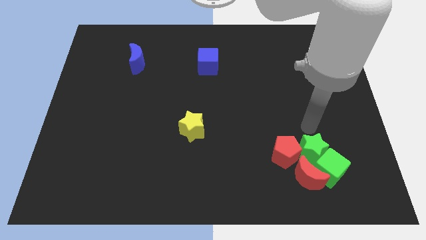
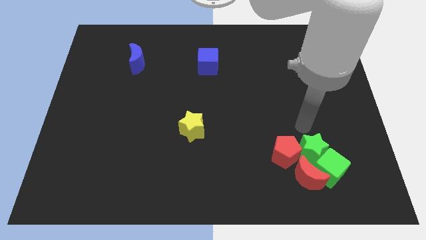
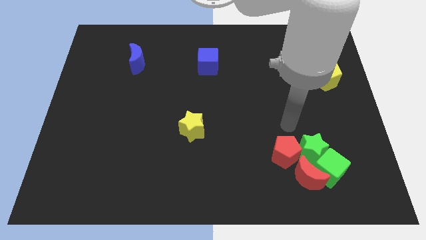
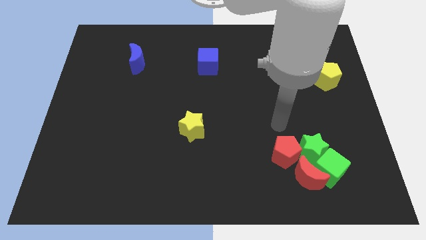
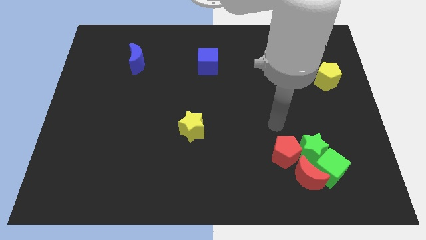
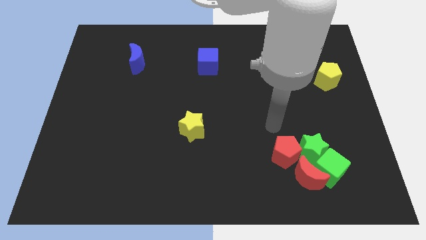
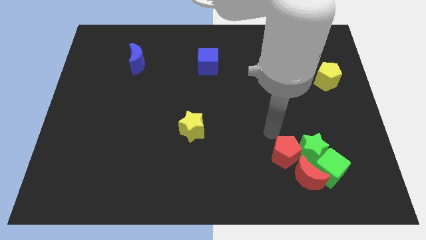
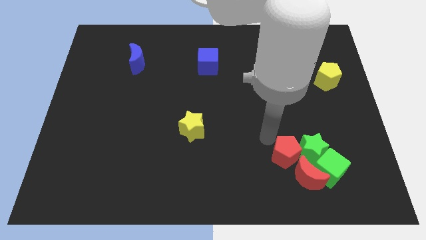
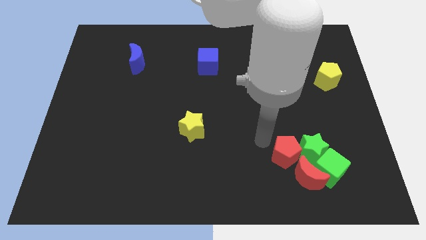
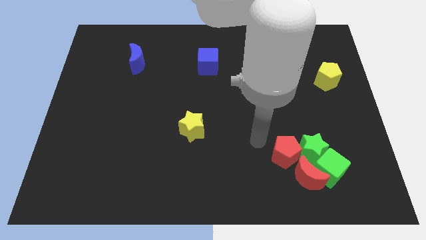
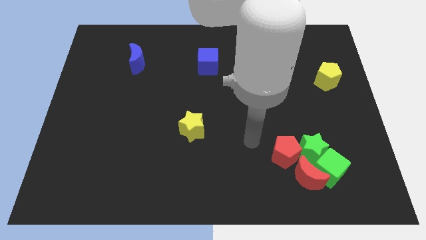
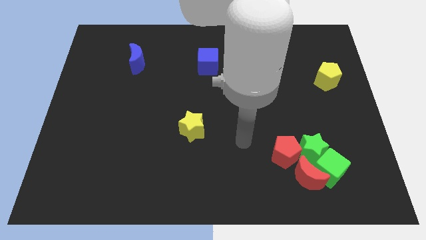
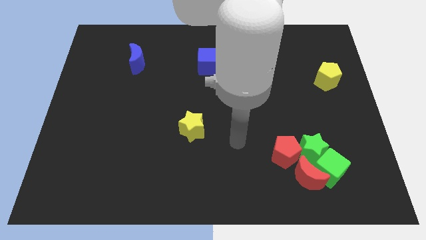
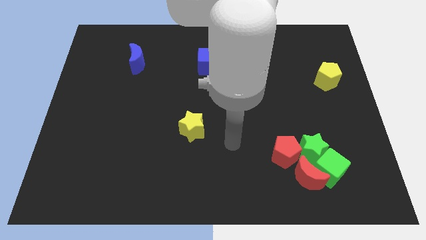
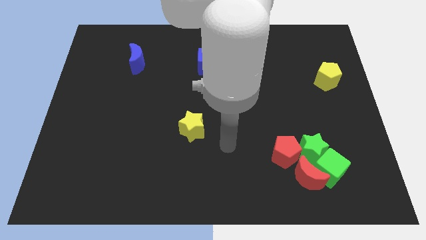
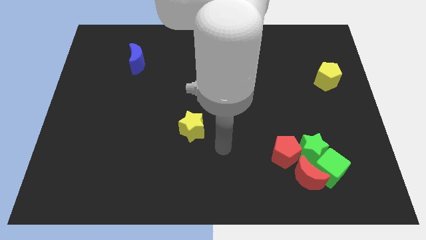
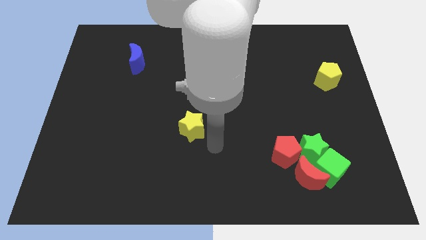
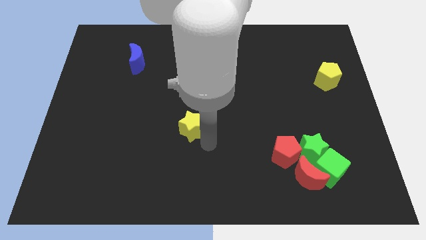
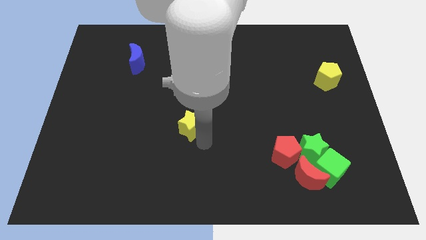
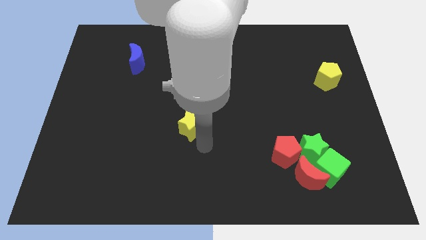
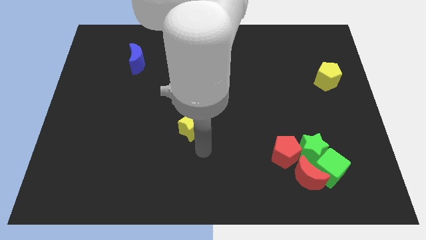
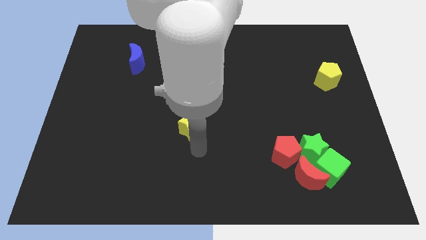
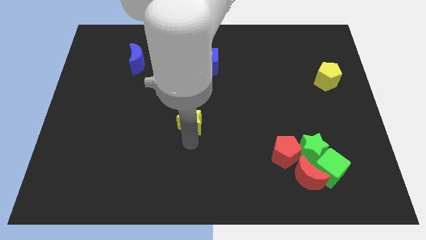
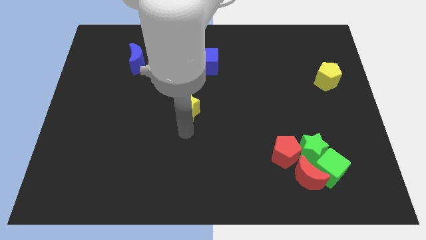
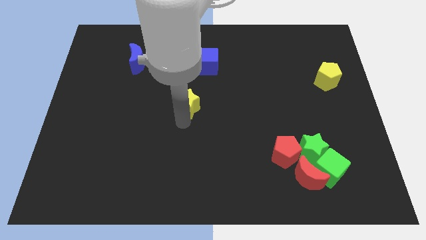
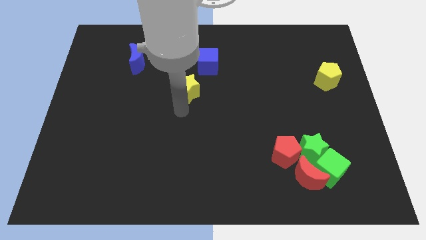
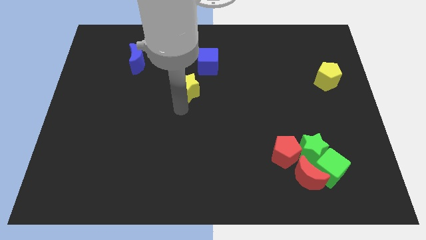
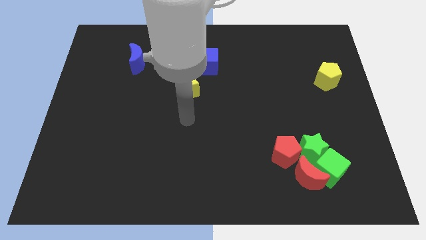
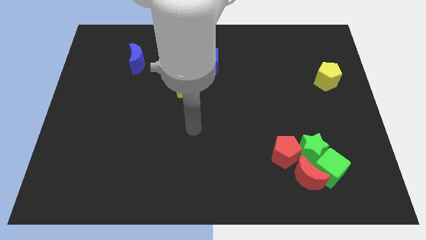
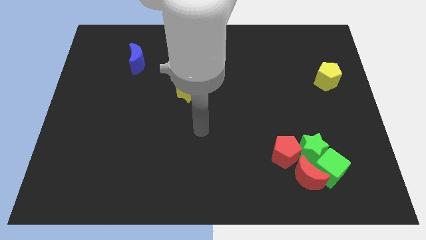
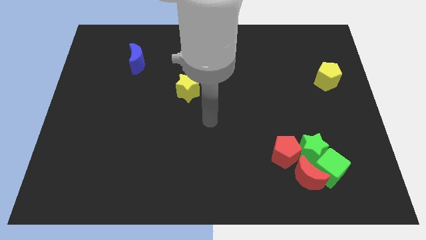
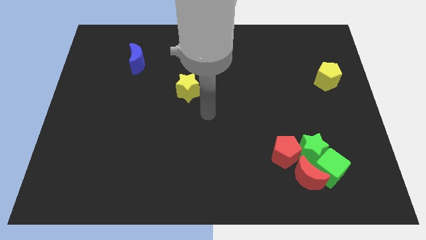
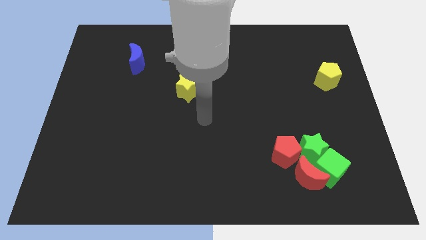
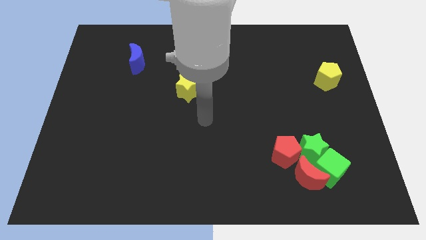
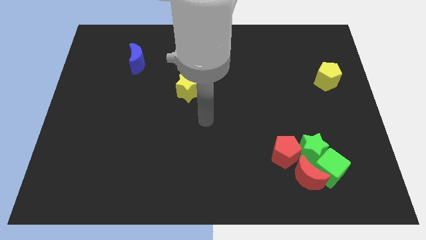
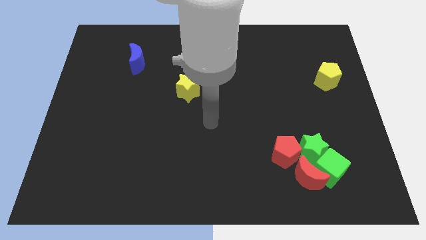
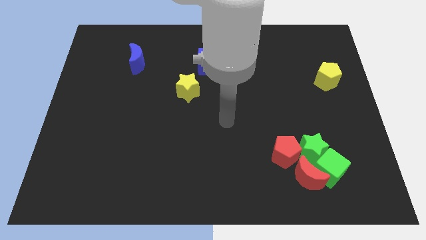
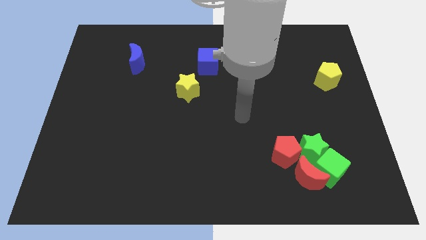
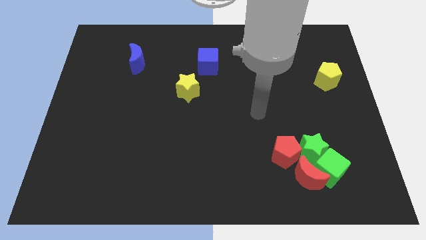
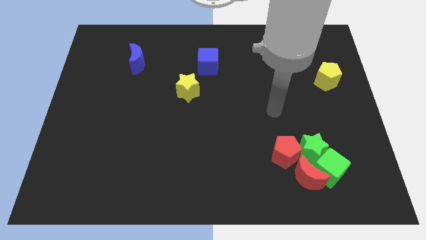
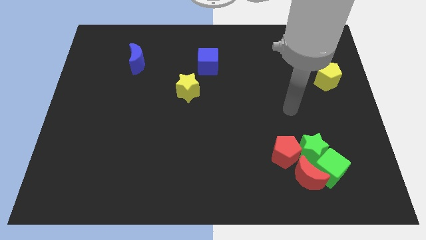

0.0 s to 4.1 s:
slide the yellow star up slightly

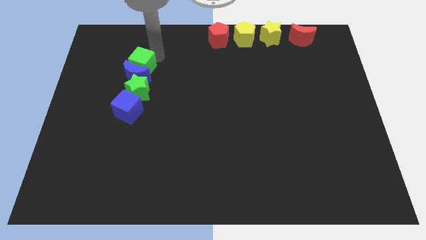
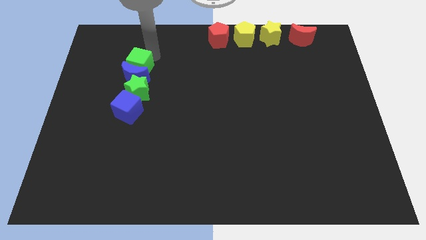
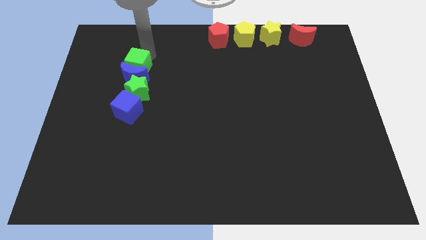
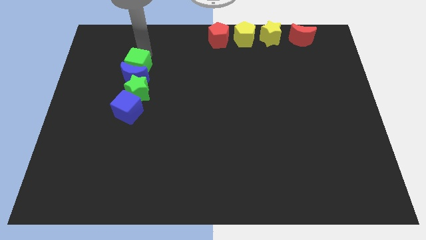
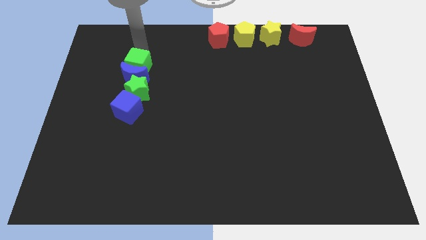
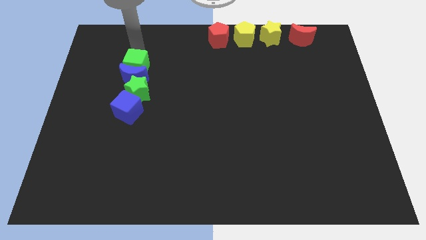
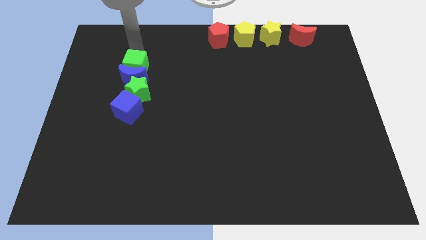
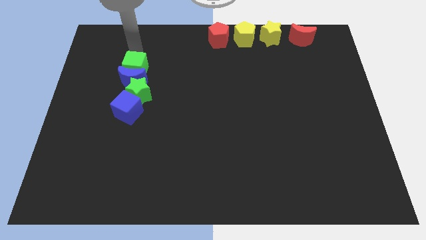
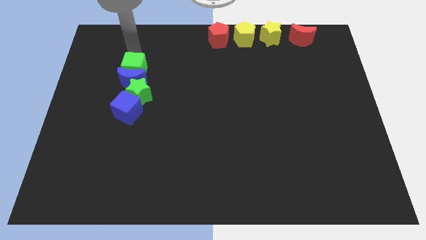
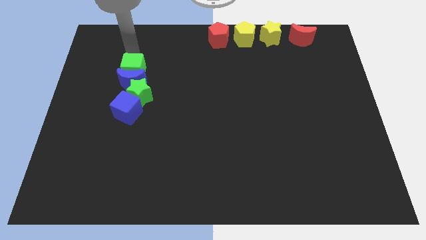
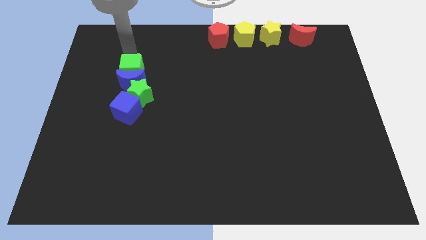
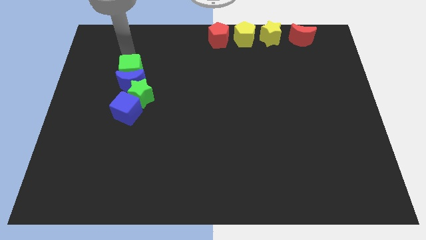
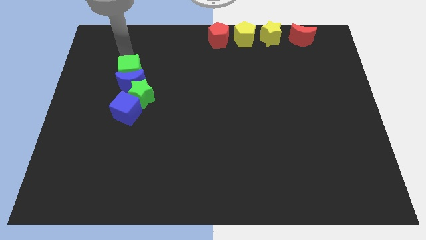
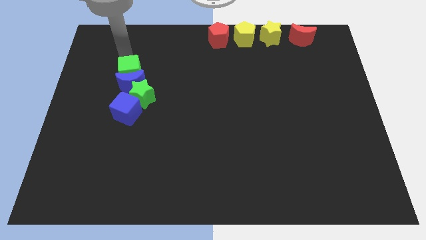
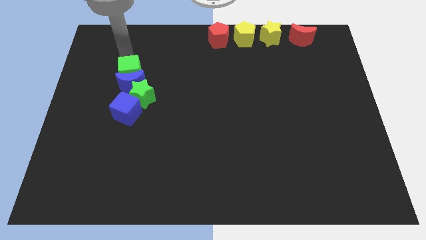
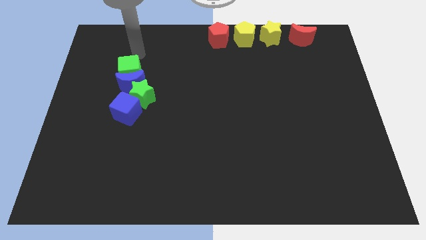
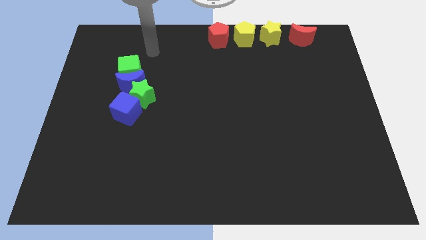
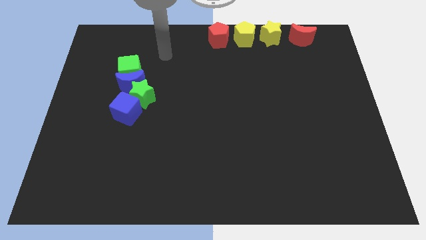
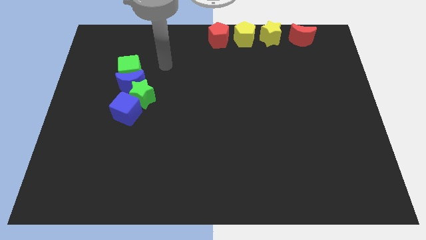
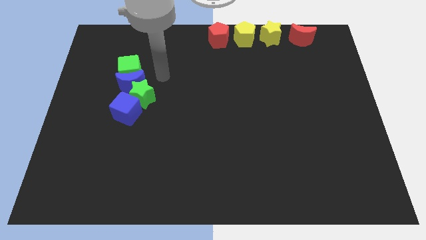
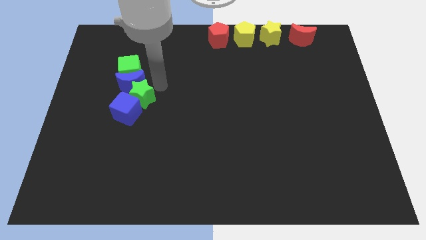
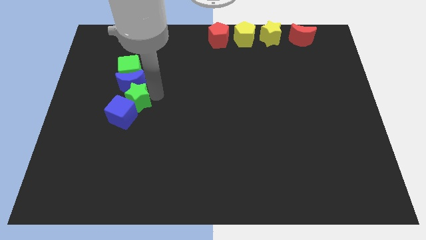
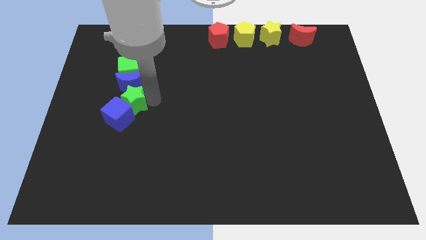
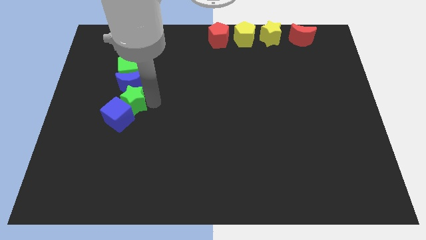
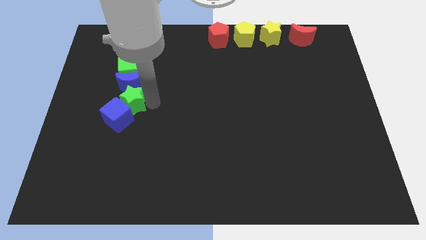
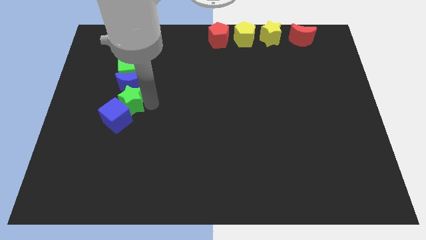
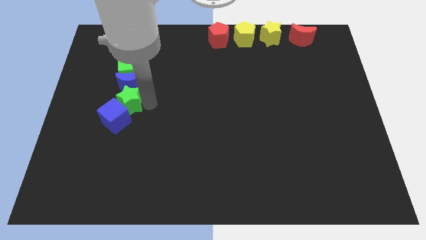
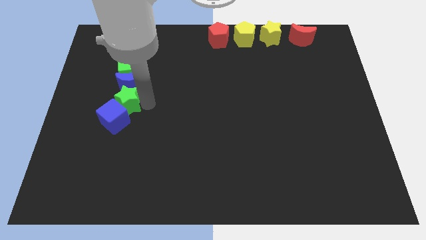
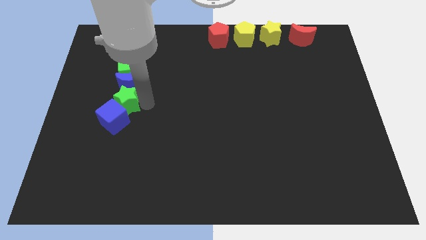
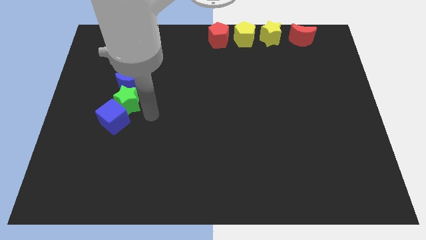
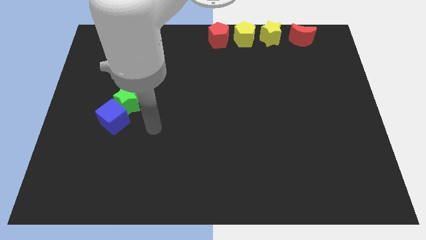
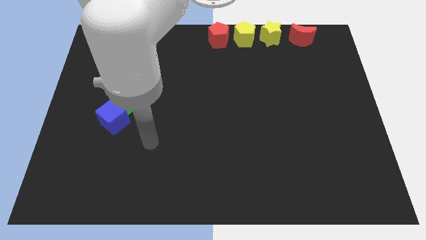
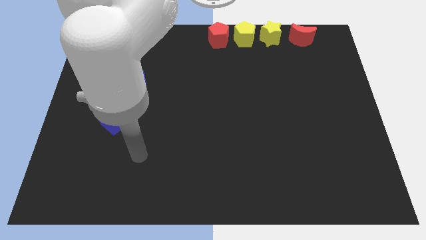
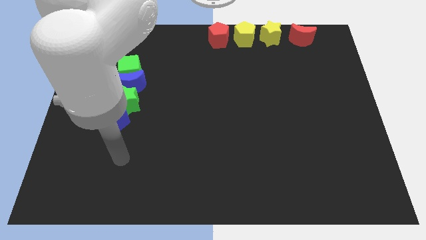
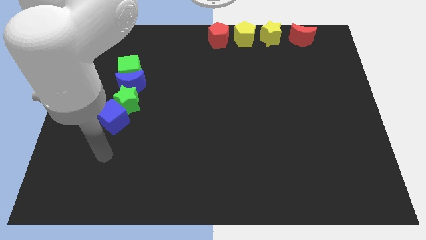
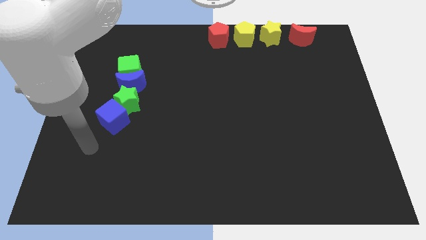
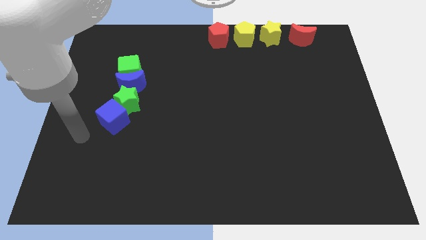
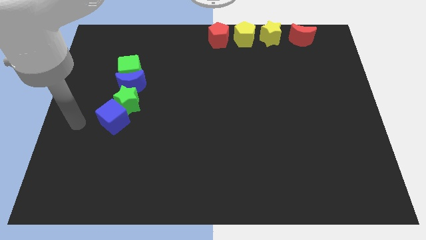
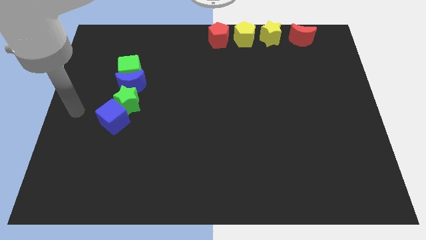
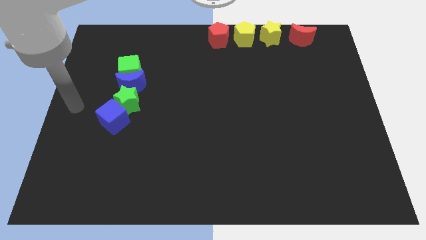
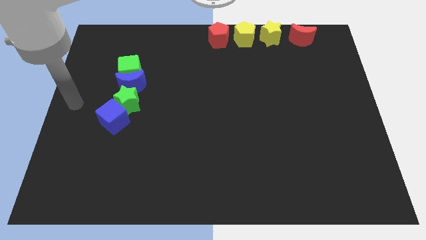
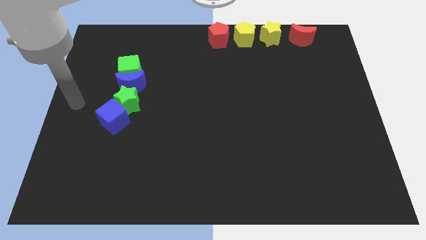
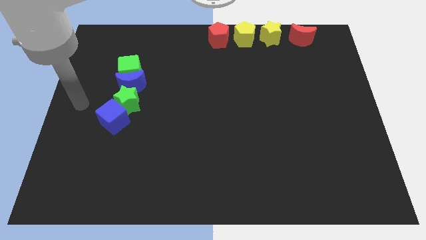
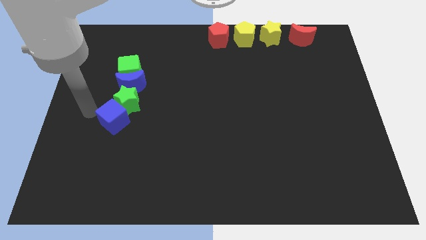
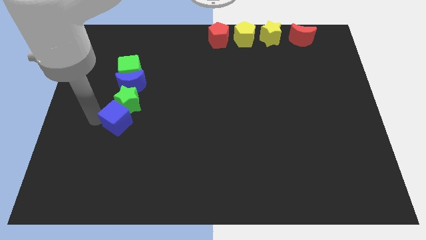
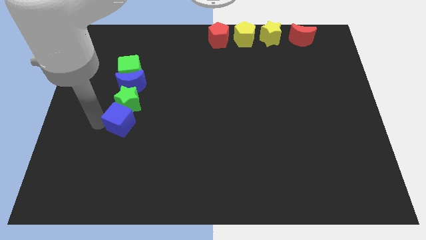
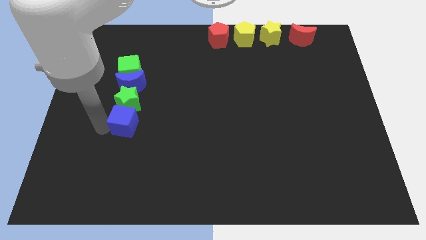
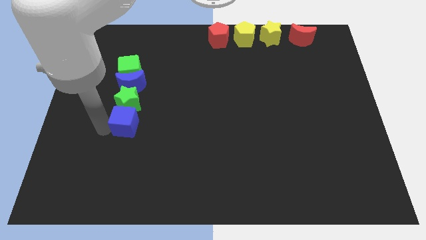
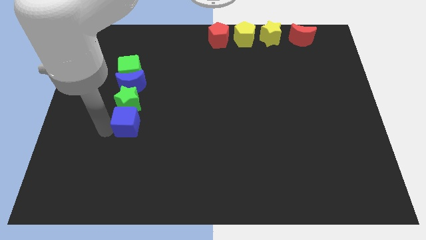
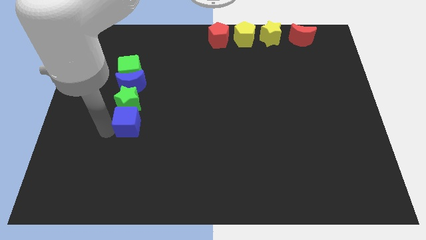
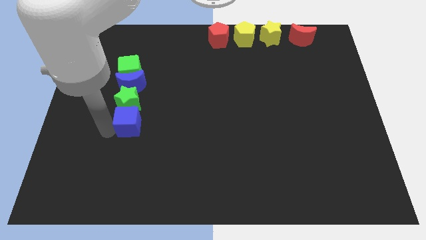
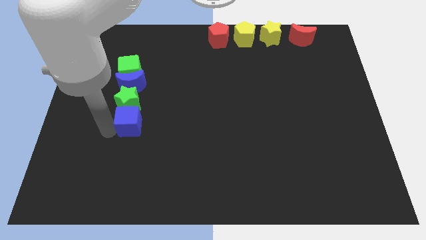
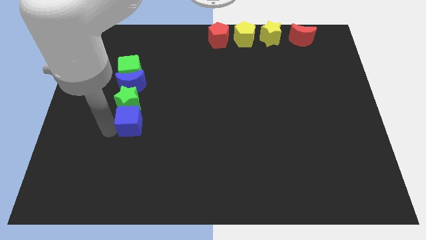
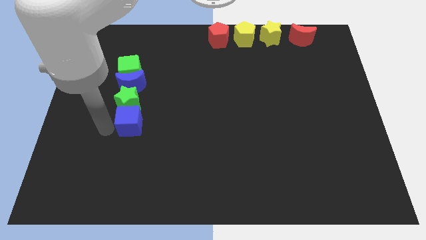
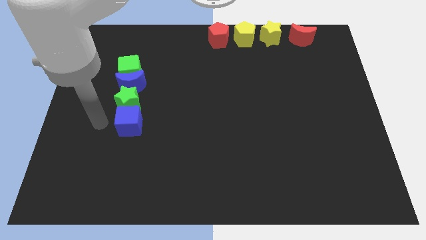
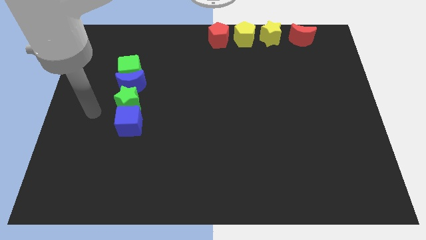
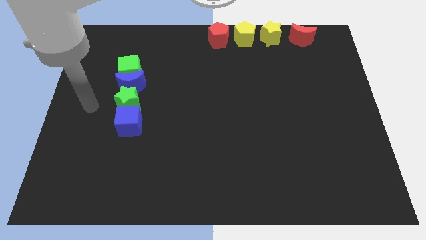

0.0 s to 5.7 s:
adjust all the green and blue blocks to form a vertical line of blocks
